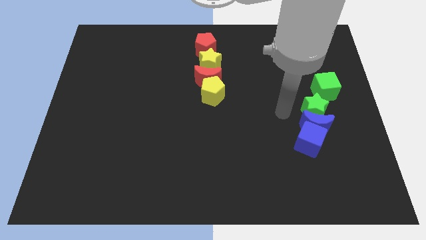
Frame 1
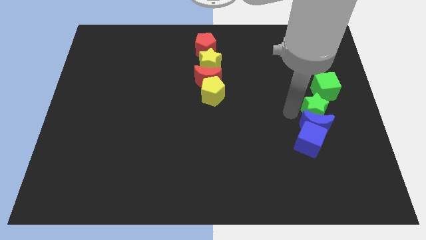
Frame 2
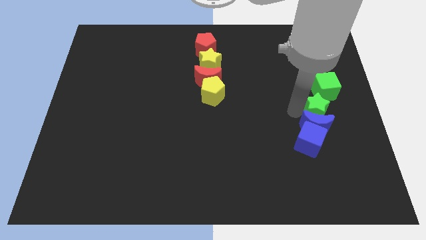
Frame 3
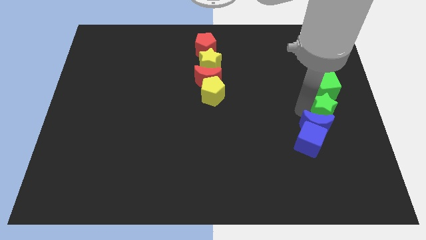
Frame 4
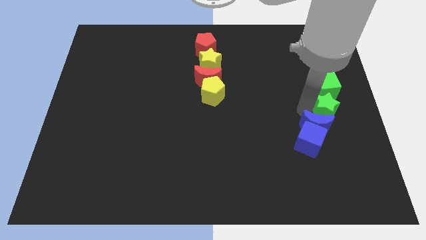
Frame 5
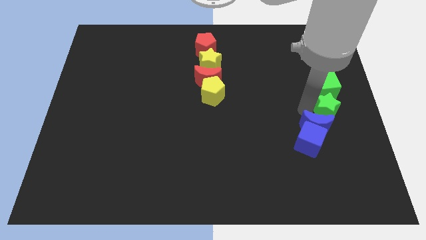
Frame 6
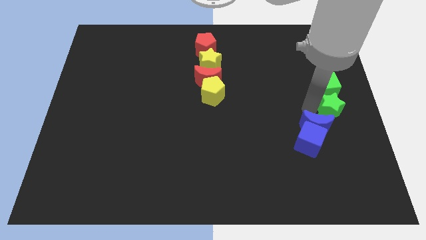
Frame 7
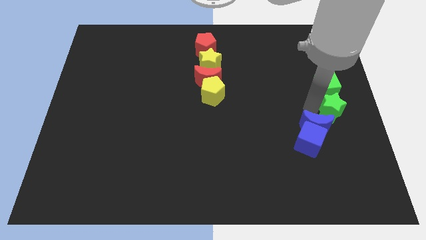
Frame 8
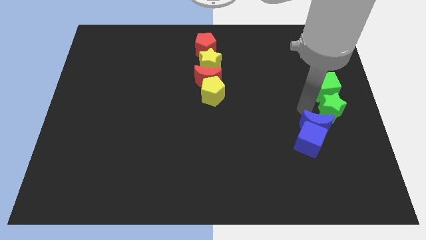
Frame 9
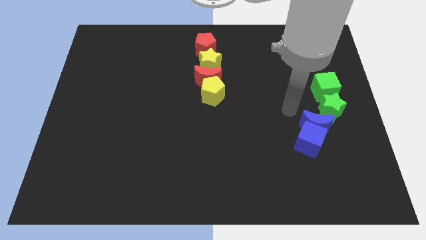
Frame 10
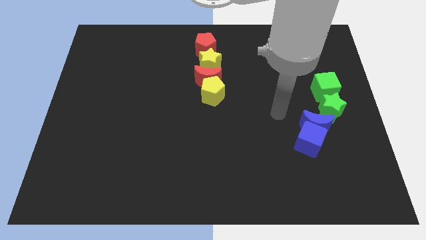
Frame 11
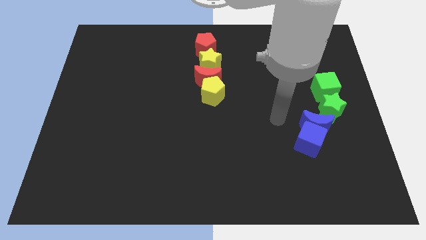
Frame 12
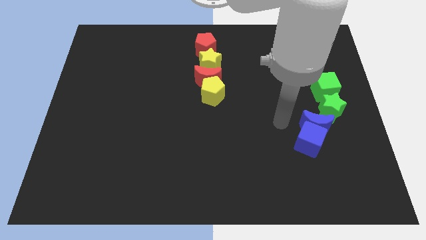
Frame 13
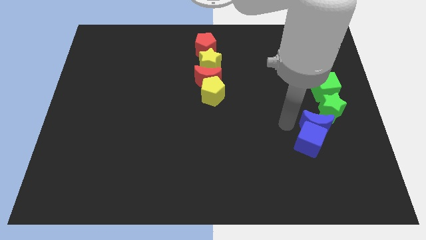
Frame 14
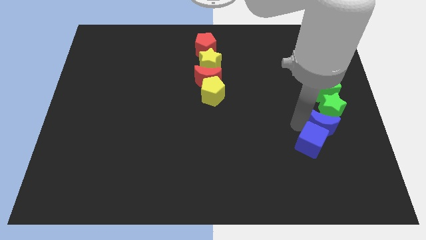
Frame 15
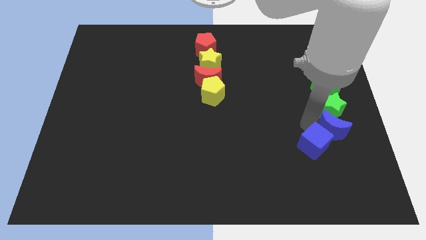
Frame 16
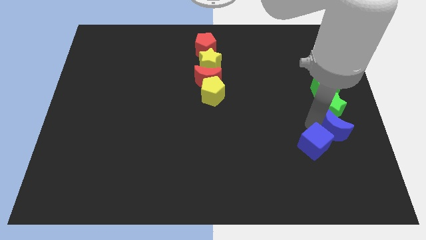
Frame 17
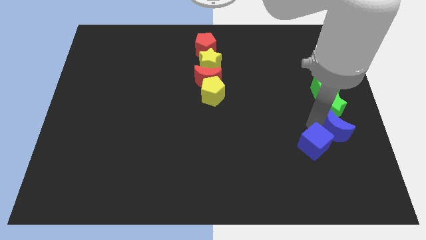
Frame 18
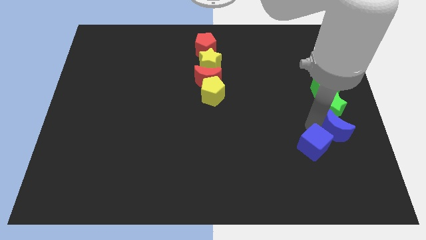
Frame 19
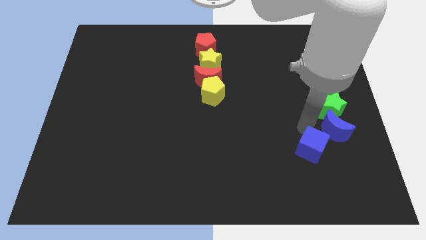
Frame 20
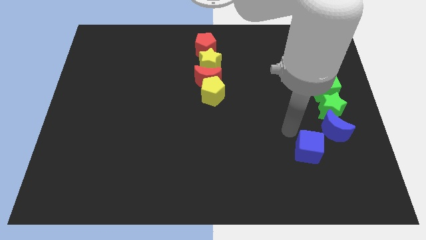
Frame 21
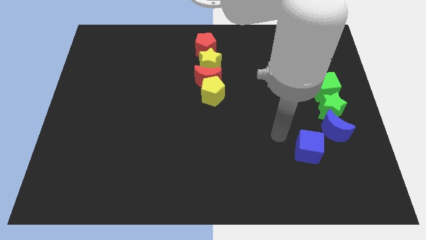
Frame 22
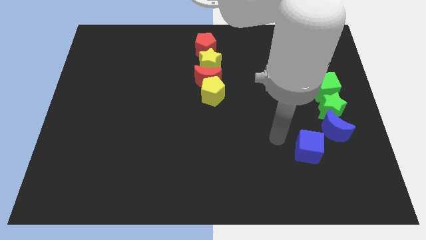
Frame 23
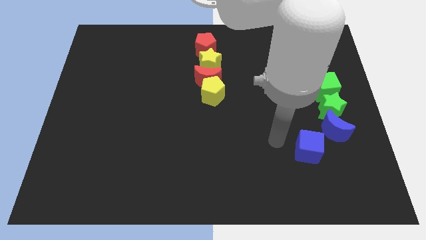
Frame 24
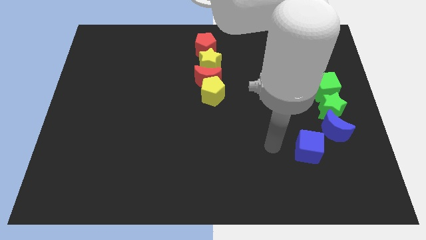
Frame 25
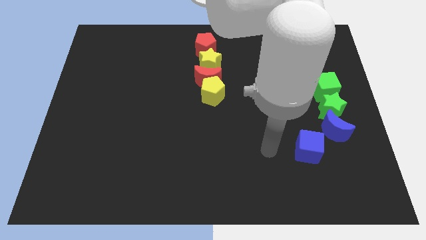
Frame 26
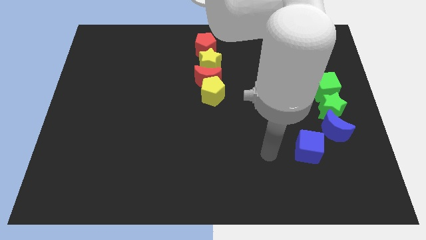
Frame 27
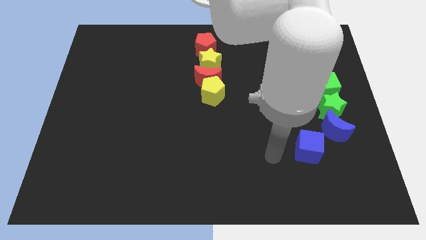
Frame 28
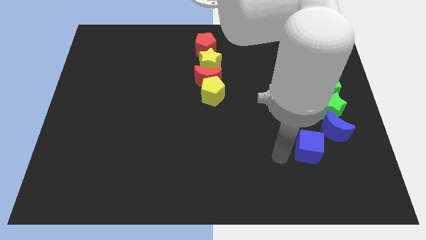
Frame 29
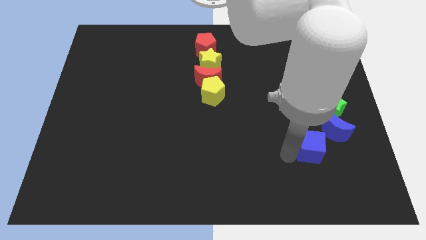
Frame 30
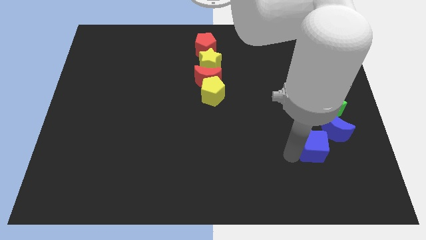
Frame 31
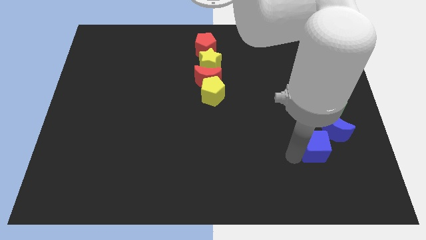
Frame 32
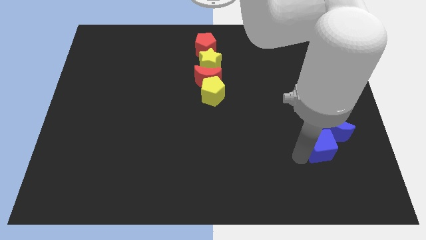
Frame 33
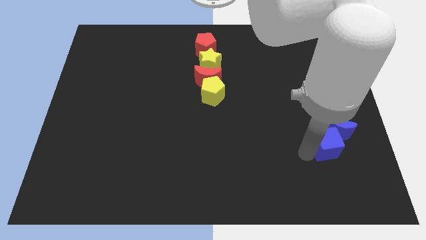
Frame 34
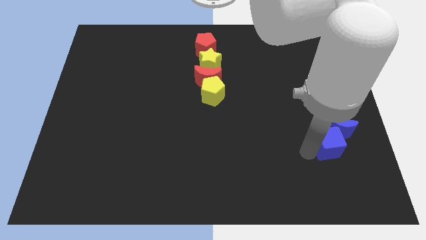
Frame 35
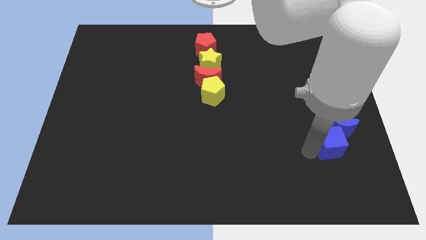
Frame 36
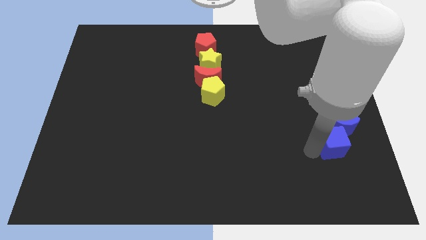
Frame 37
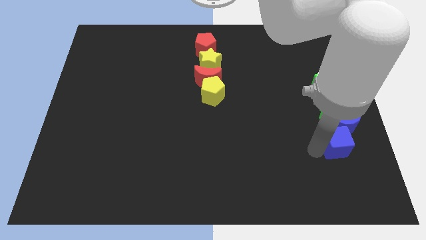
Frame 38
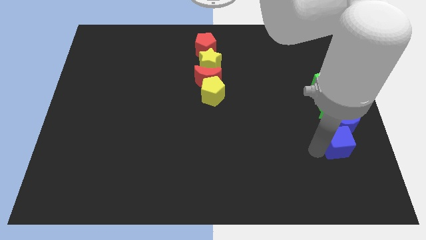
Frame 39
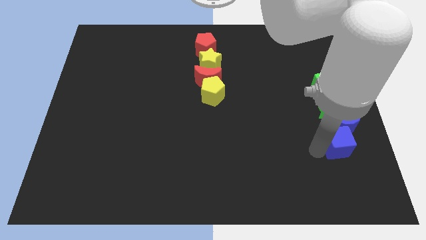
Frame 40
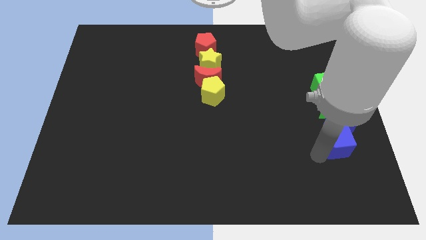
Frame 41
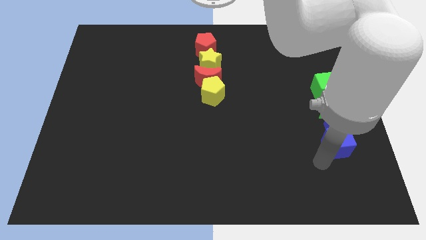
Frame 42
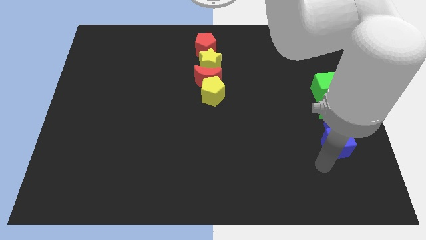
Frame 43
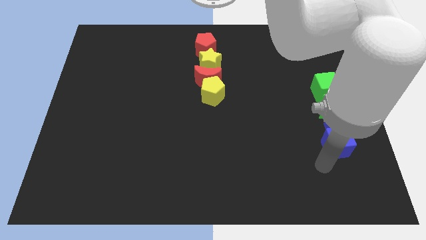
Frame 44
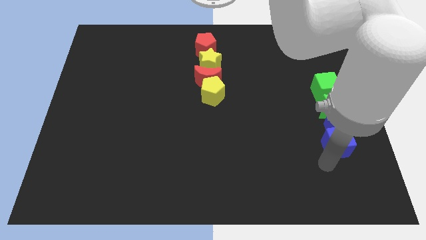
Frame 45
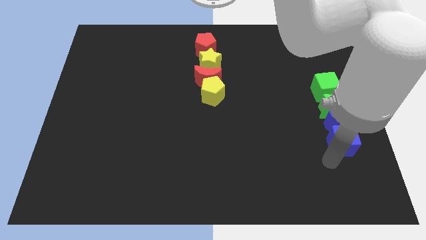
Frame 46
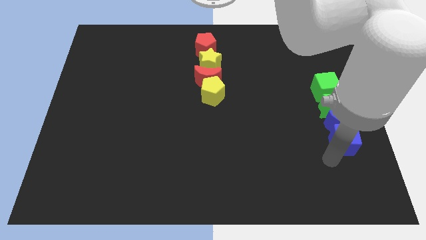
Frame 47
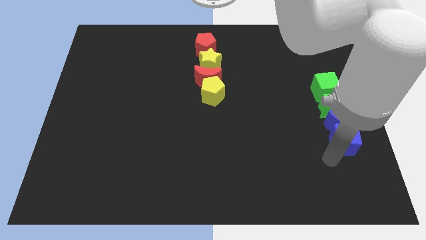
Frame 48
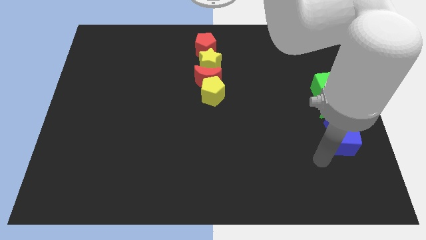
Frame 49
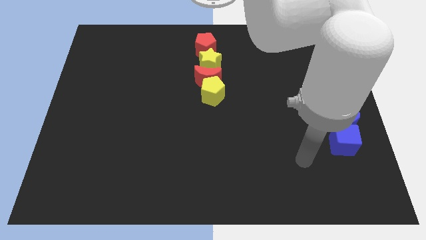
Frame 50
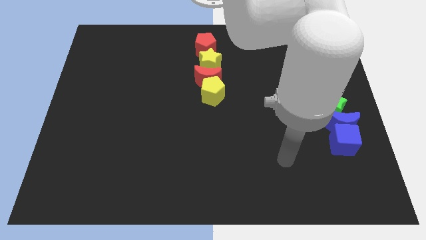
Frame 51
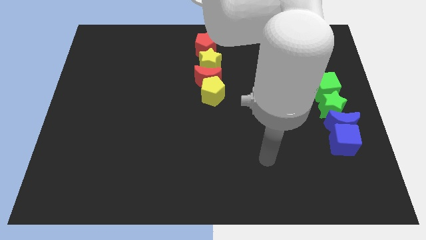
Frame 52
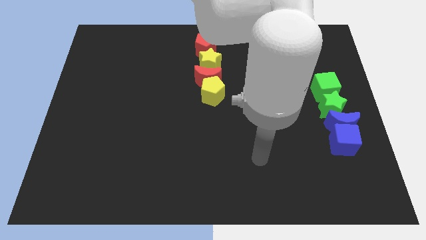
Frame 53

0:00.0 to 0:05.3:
form a vertical line with green star blue moon and blue cube at the center left

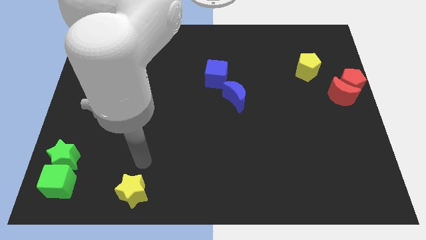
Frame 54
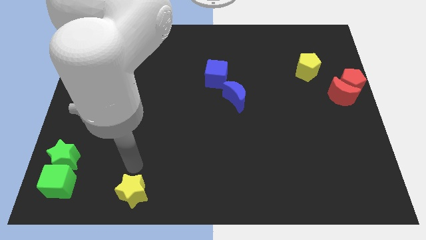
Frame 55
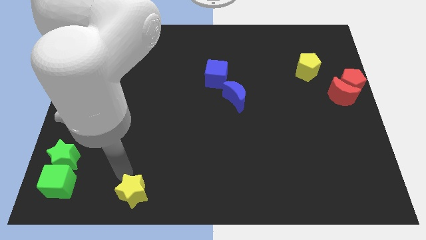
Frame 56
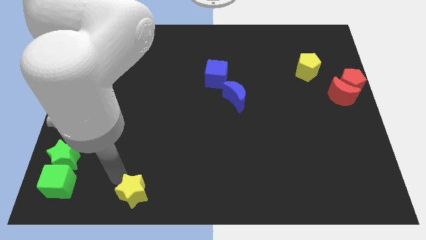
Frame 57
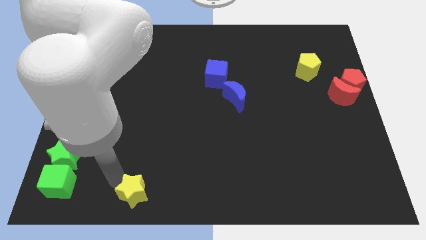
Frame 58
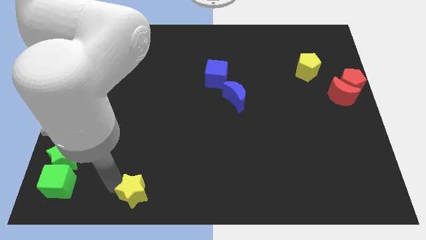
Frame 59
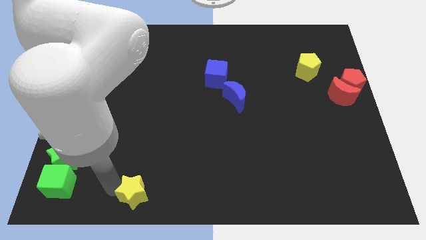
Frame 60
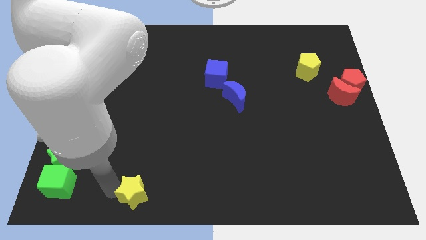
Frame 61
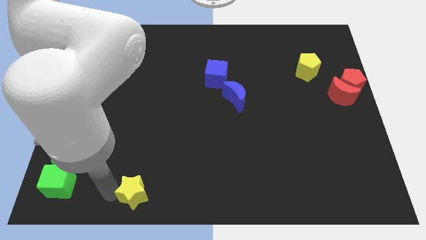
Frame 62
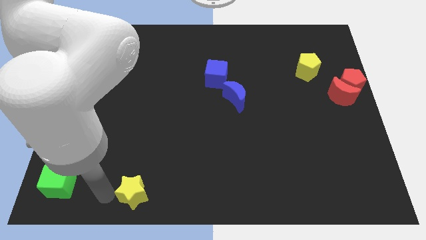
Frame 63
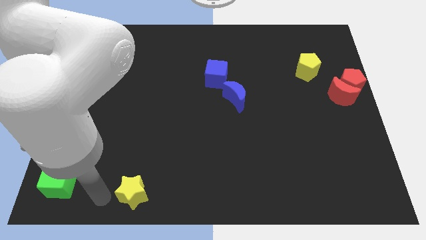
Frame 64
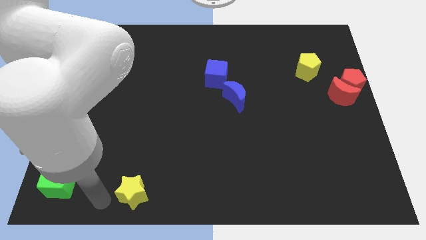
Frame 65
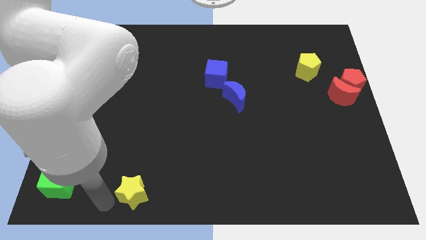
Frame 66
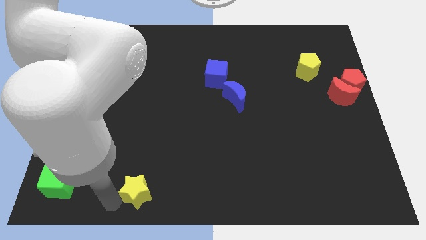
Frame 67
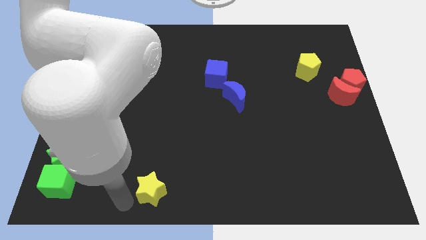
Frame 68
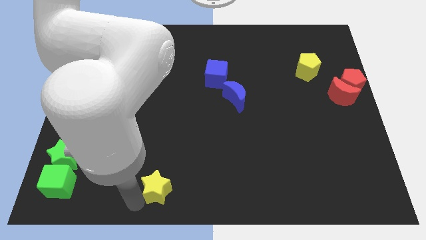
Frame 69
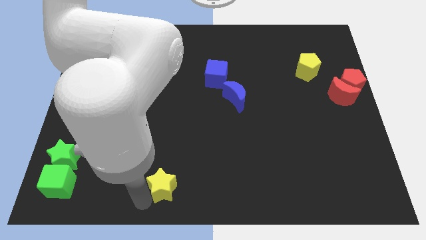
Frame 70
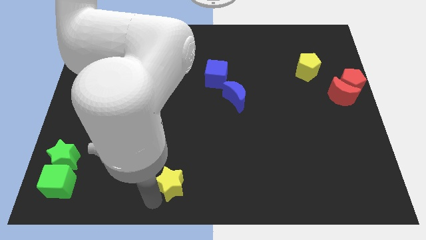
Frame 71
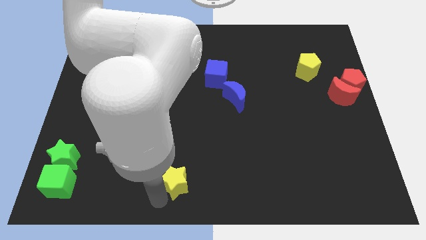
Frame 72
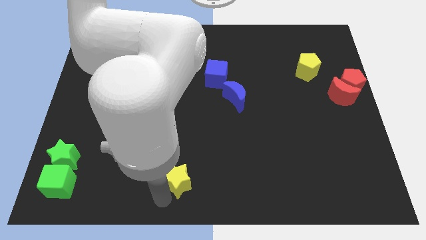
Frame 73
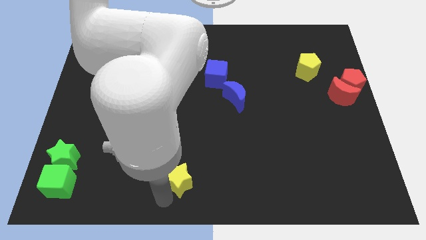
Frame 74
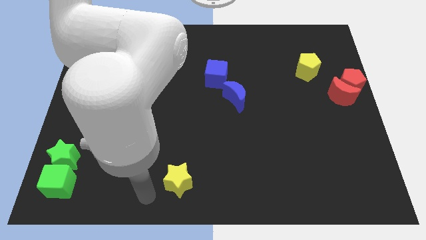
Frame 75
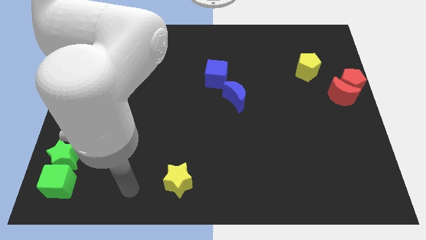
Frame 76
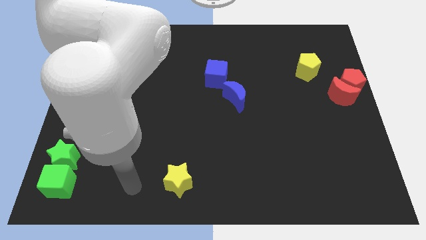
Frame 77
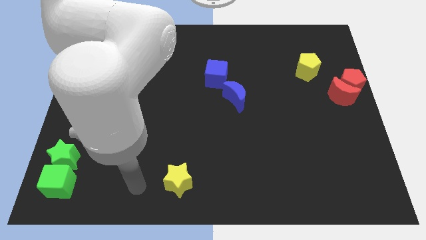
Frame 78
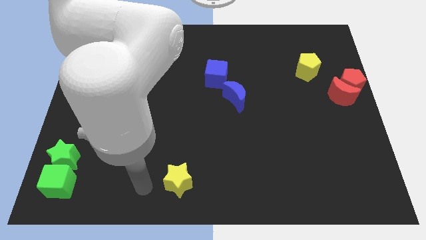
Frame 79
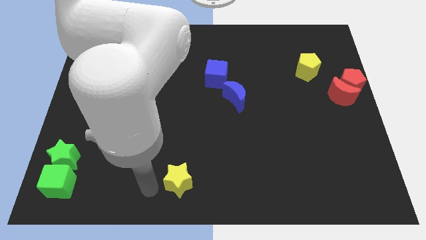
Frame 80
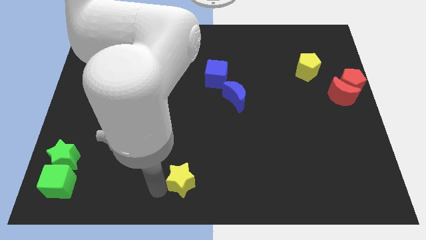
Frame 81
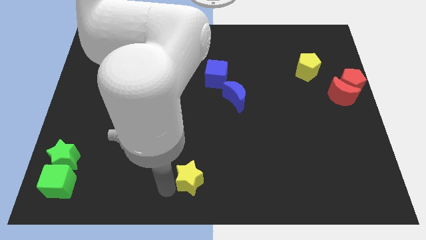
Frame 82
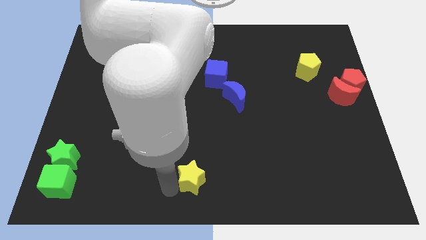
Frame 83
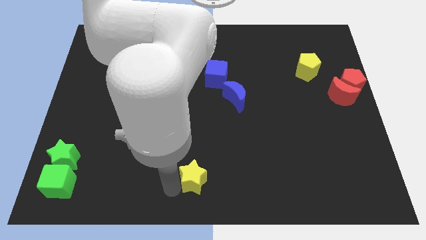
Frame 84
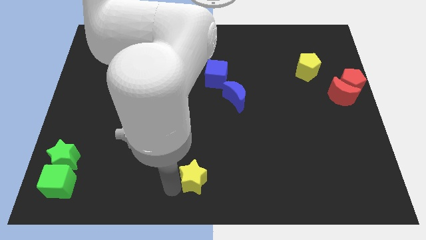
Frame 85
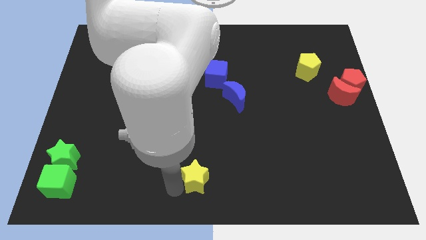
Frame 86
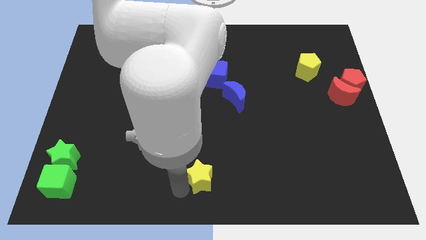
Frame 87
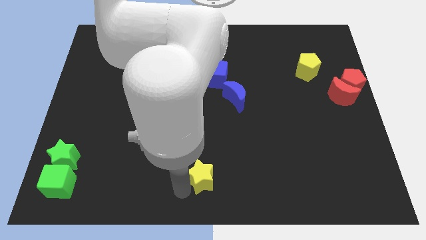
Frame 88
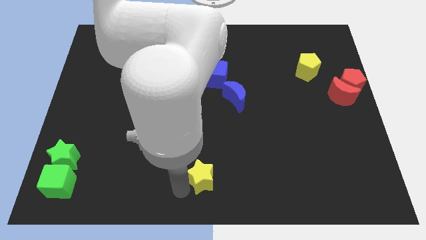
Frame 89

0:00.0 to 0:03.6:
place the yellow star towards the bottom center of the board

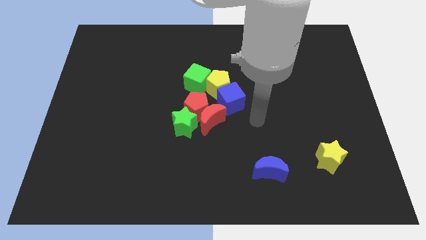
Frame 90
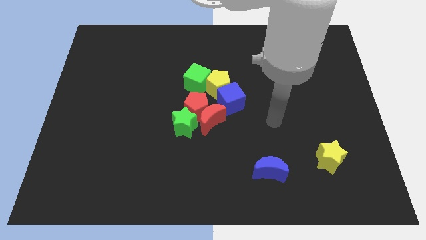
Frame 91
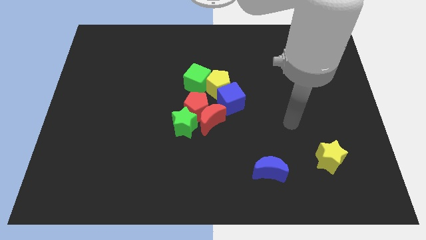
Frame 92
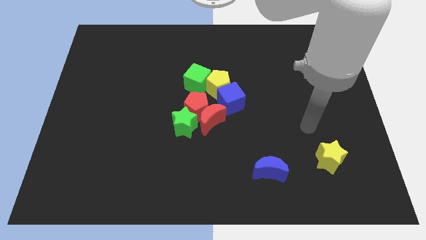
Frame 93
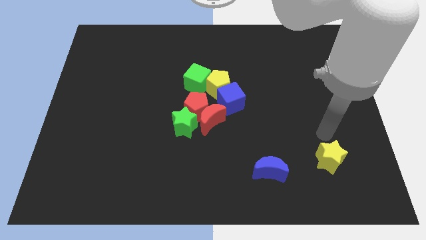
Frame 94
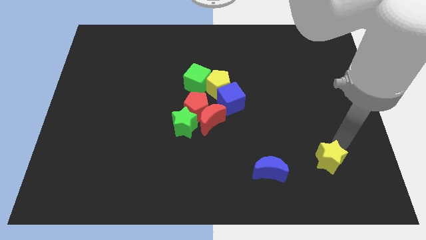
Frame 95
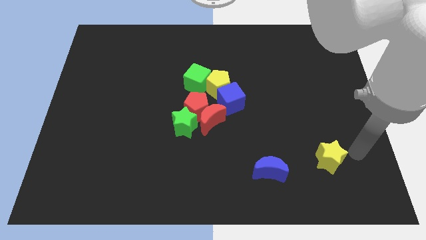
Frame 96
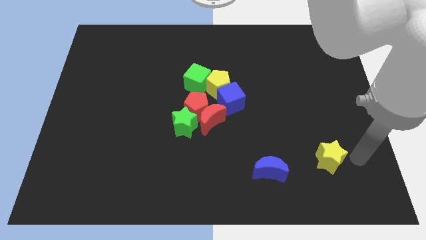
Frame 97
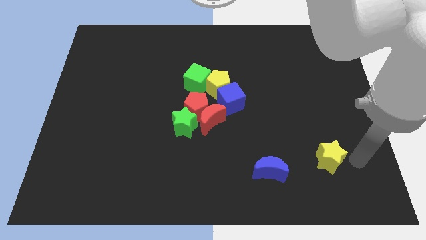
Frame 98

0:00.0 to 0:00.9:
move the arm away from the blue cube
